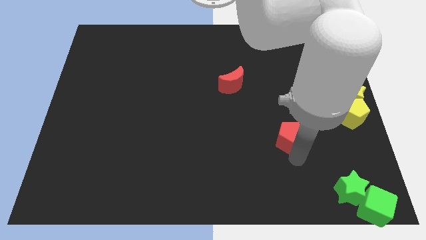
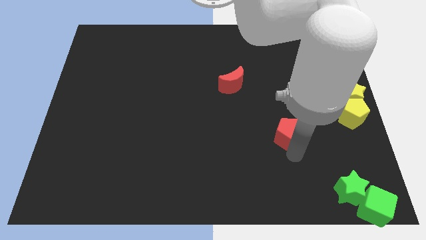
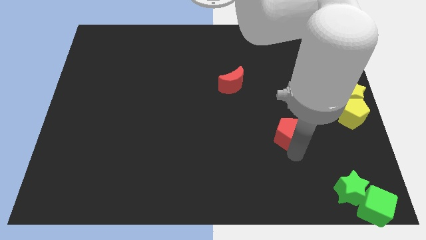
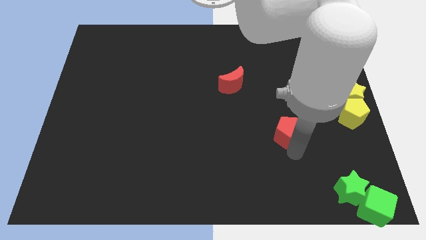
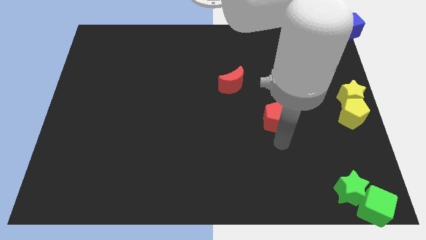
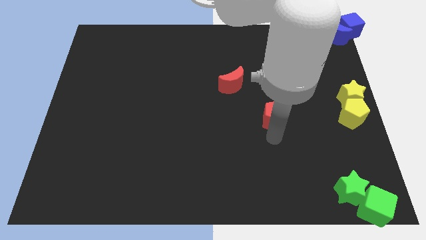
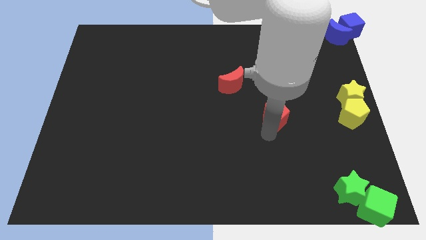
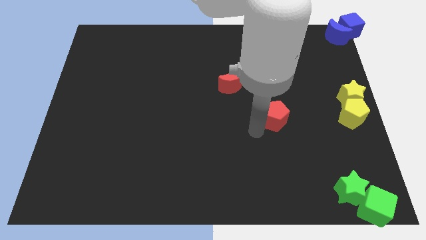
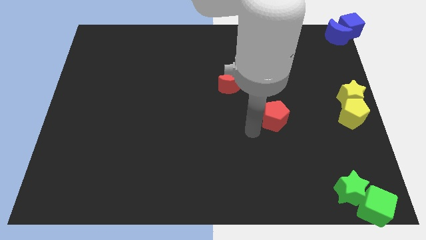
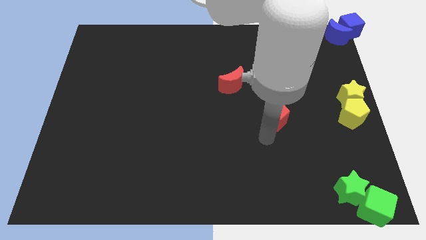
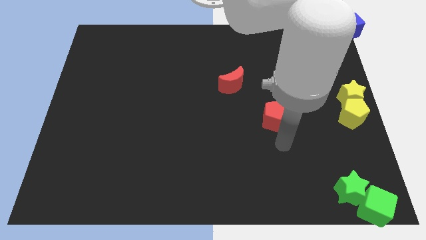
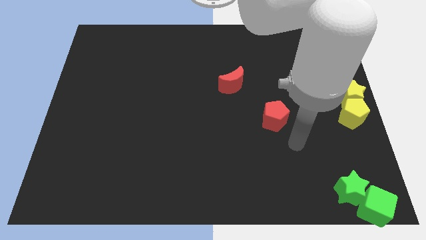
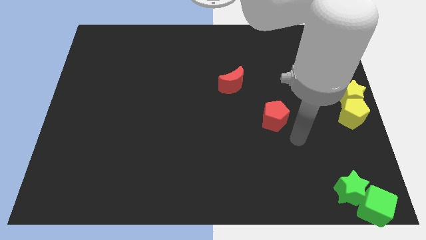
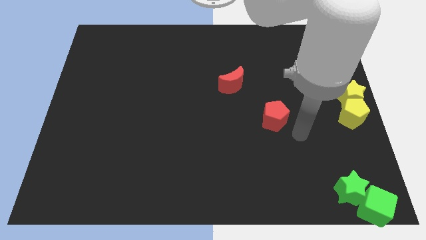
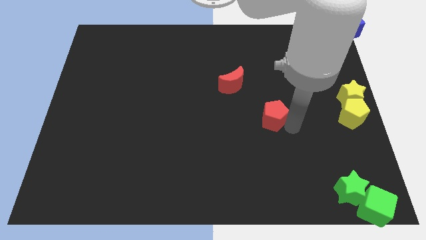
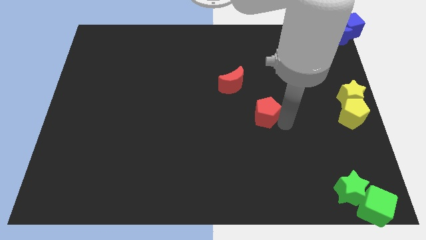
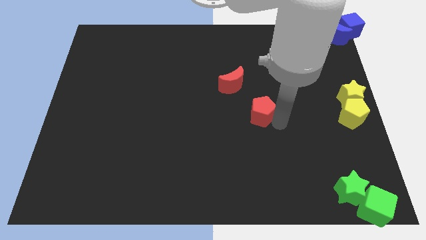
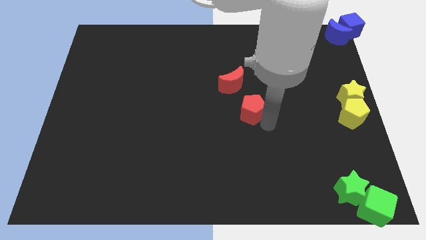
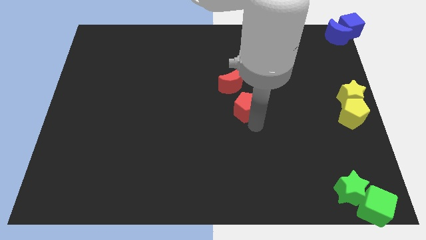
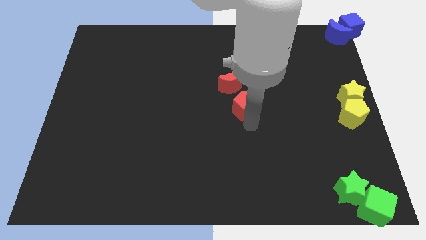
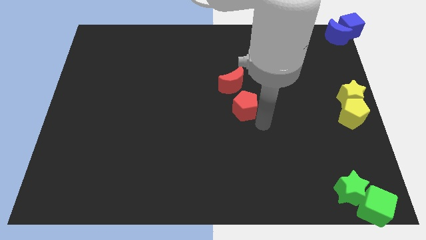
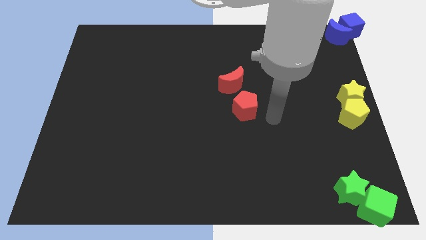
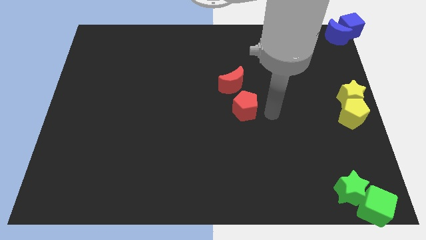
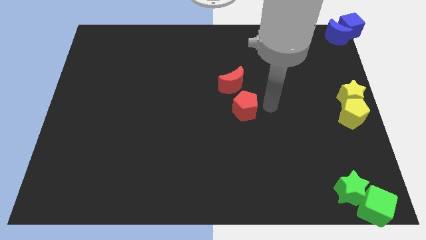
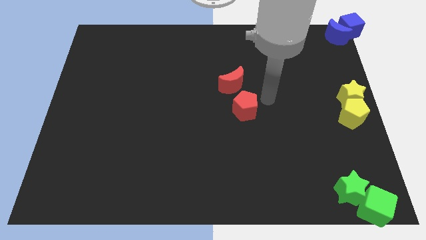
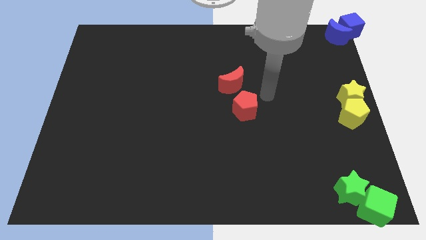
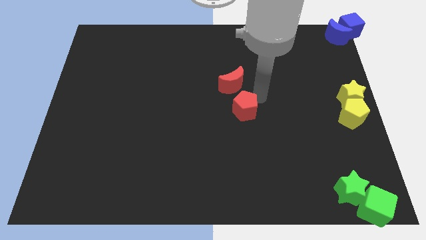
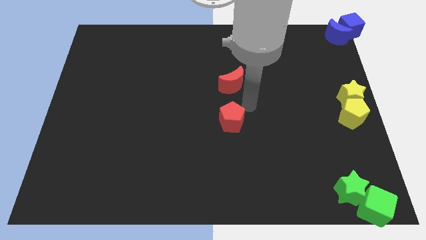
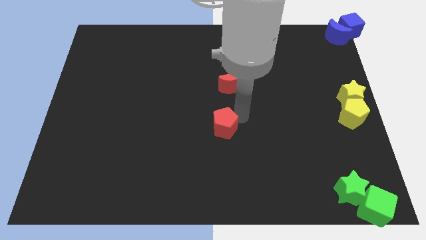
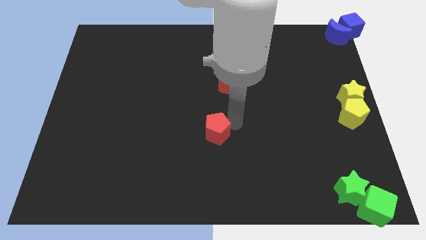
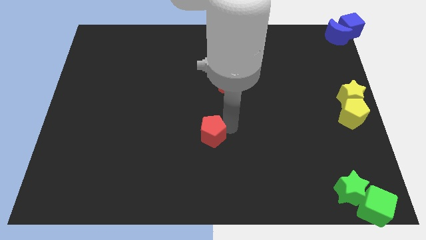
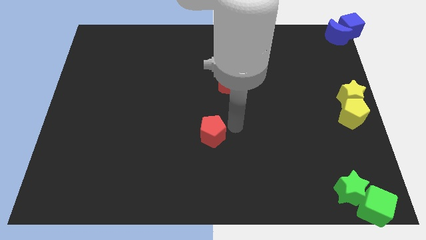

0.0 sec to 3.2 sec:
push the red pentagon diagonal to the red crescent

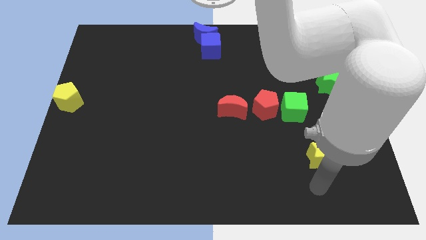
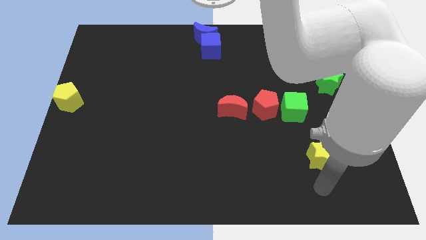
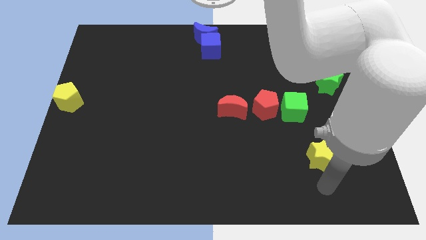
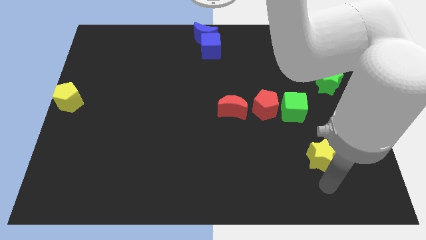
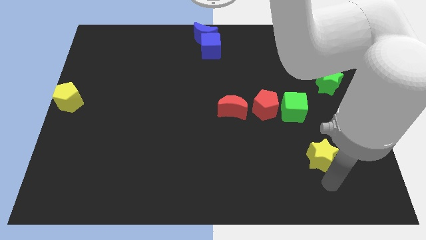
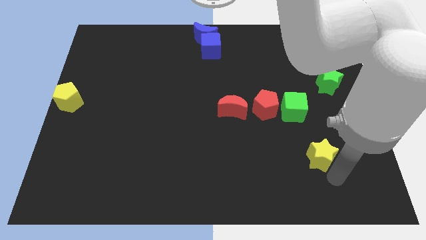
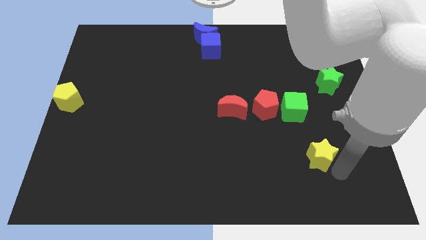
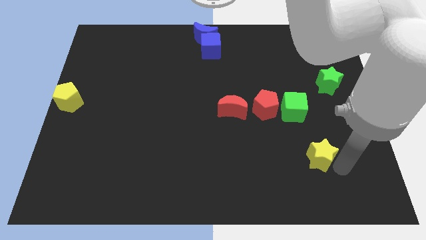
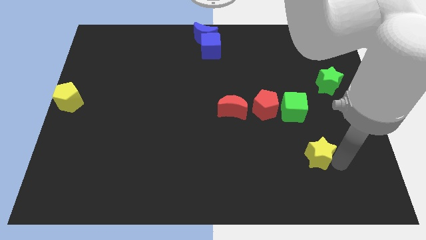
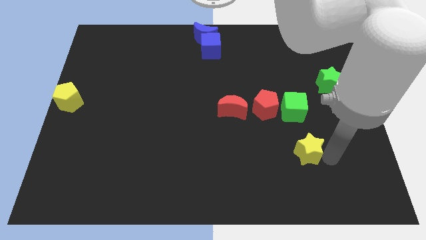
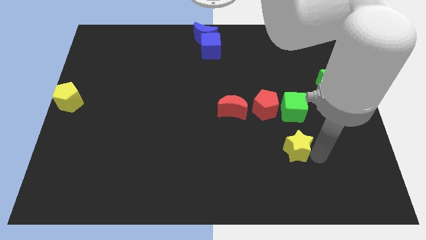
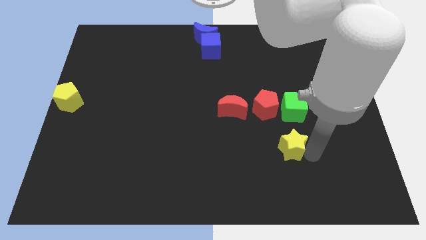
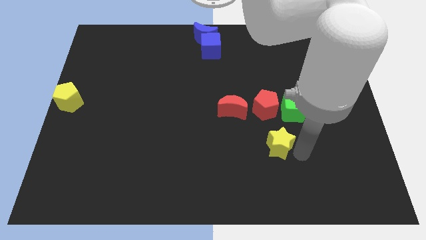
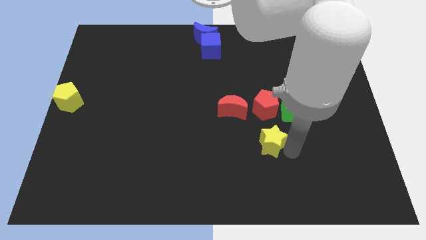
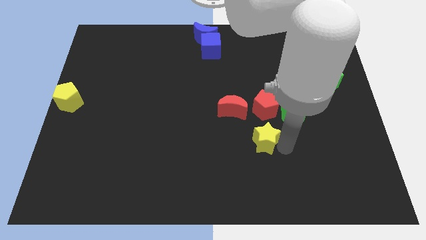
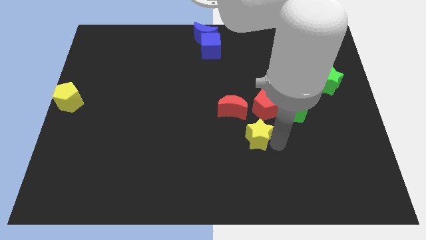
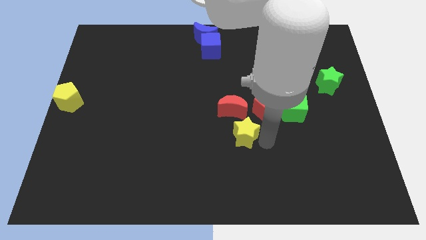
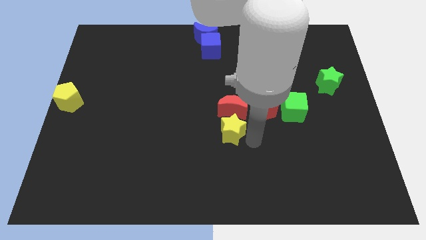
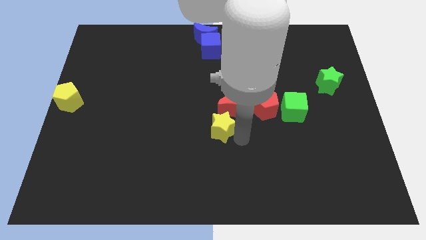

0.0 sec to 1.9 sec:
place the yellow star left below the red crescent

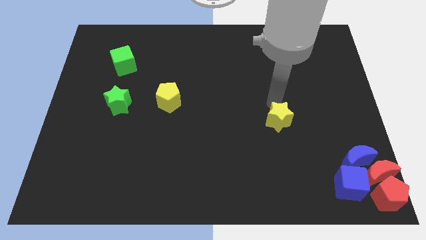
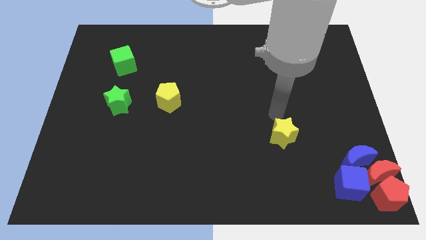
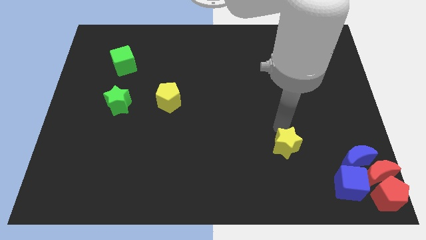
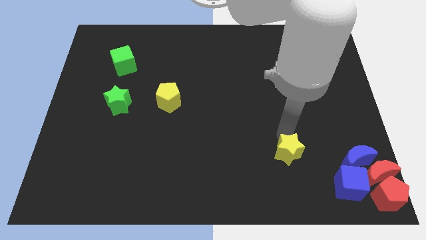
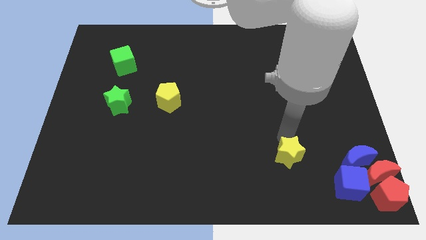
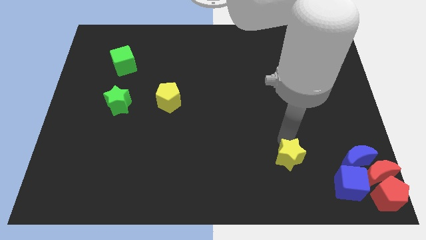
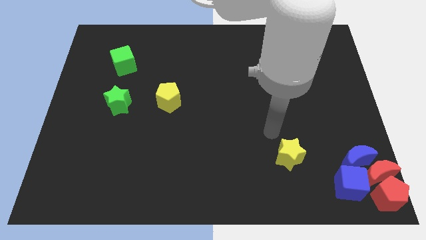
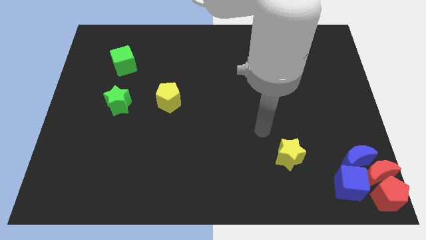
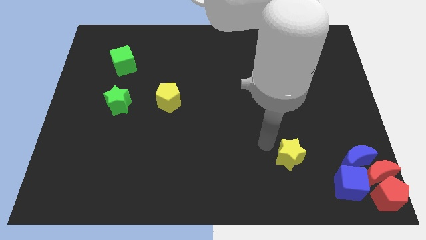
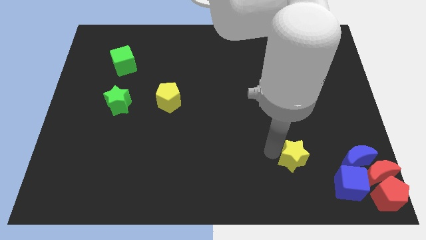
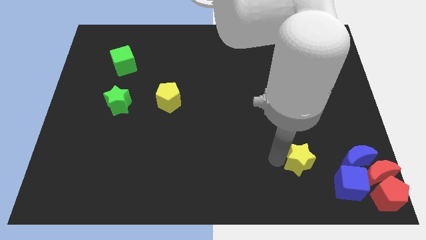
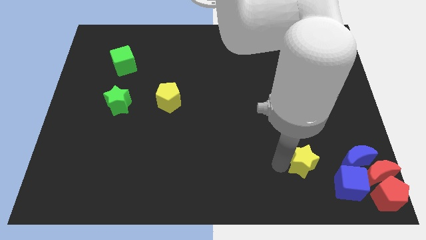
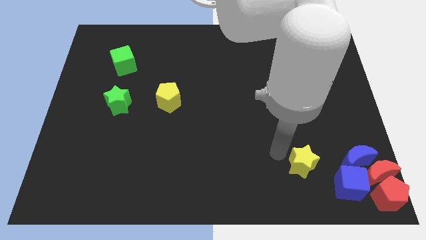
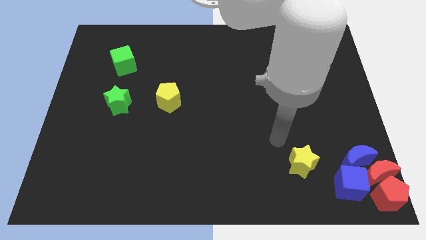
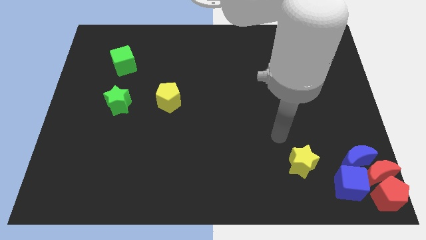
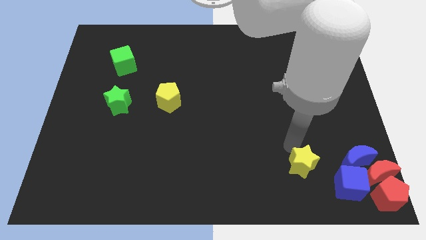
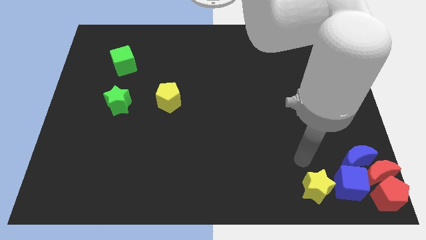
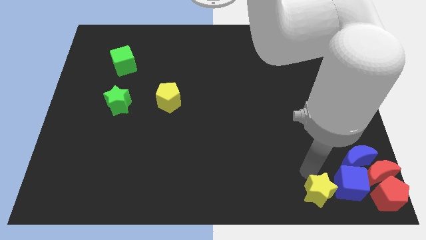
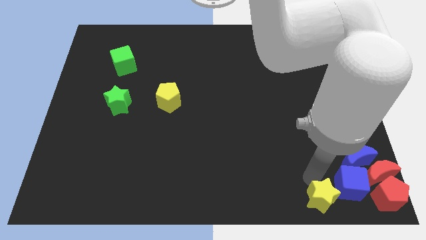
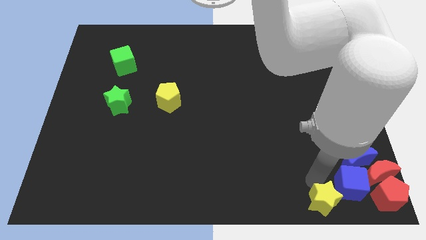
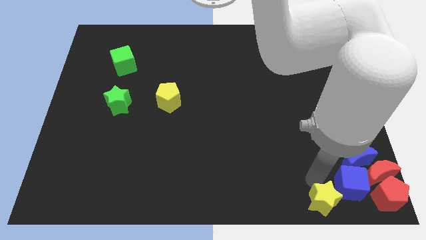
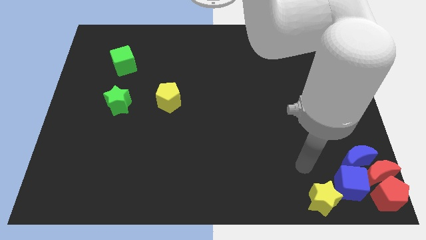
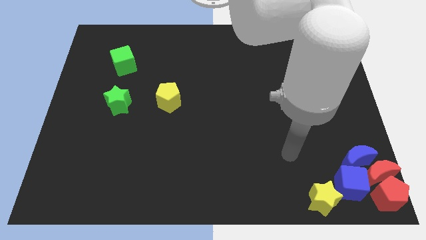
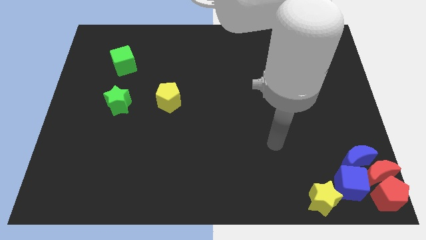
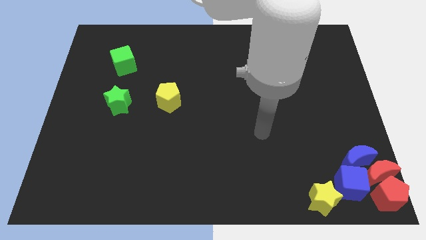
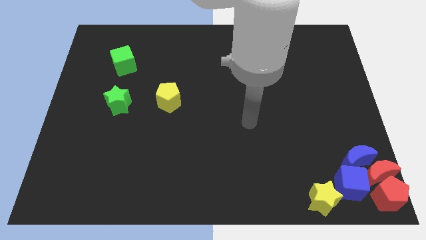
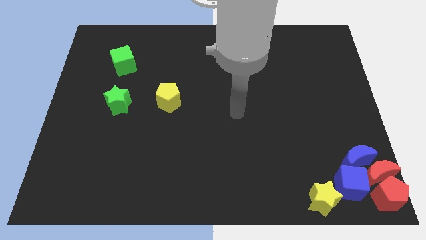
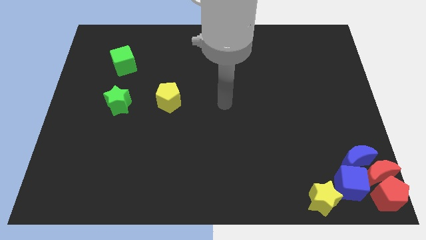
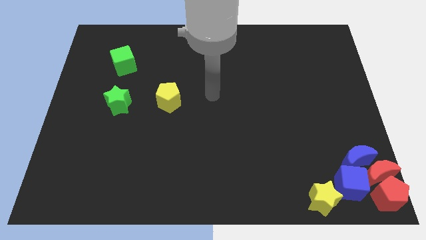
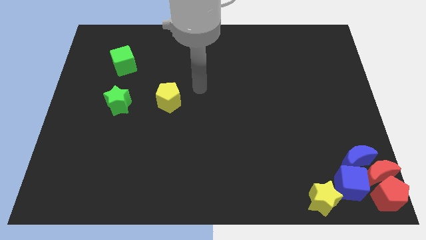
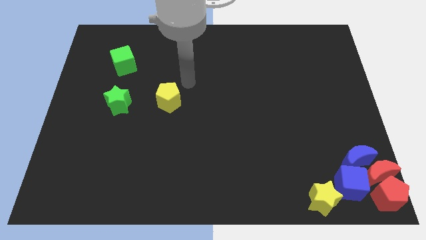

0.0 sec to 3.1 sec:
move the yellow star to the bottom left side of the blue cube

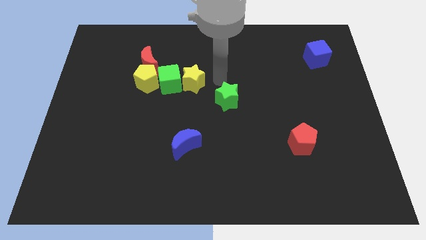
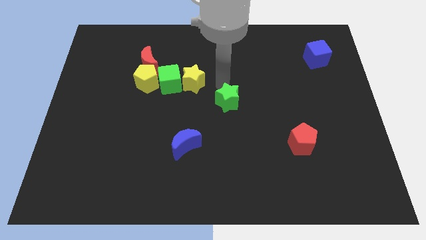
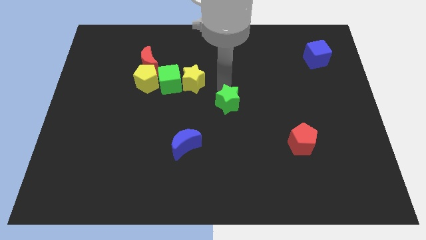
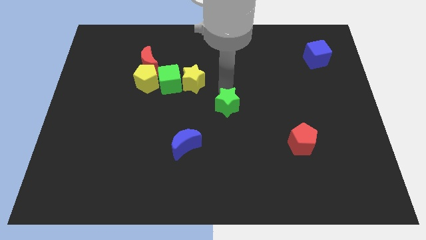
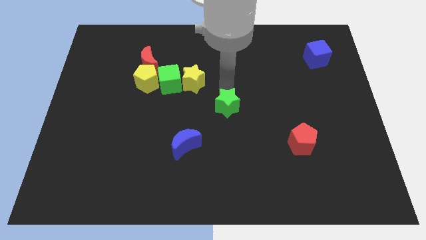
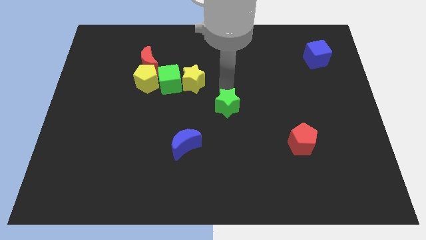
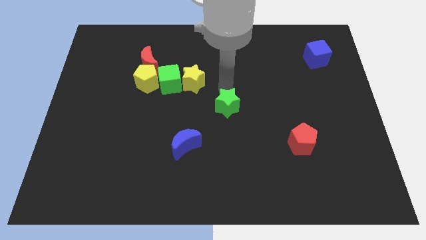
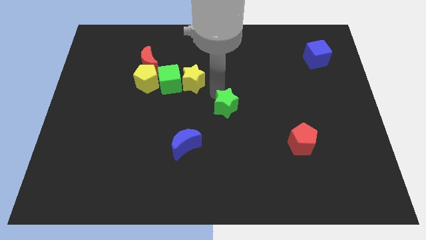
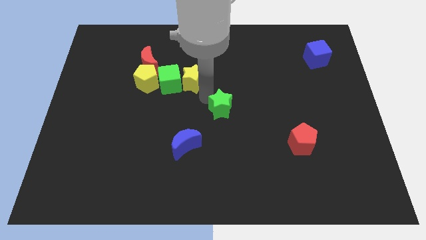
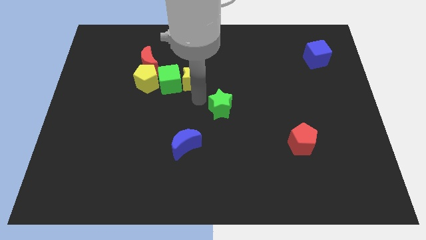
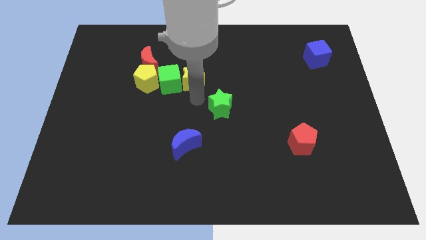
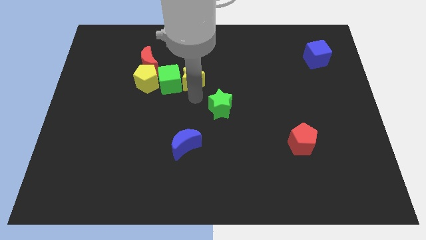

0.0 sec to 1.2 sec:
place the arm down to the yellow star
